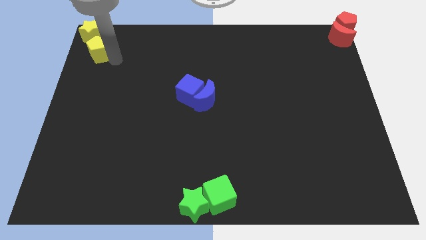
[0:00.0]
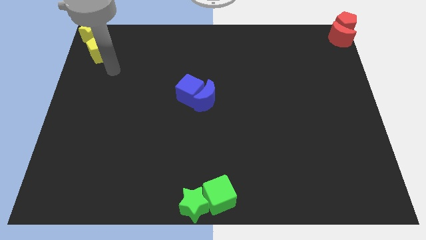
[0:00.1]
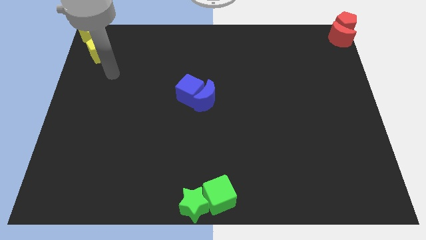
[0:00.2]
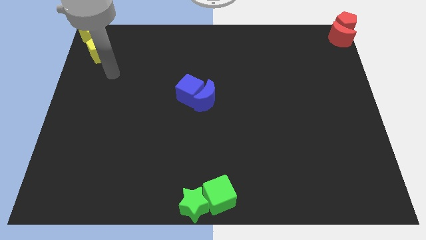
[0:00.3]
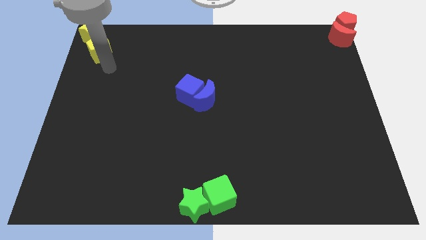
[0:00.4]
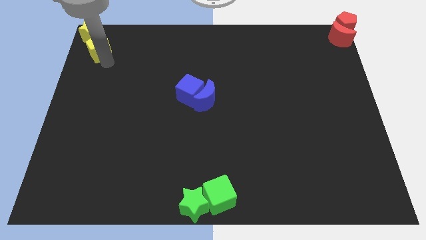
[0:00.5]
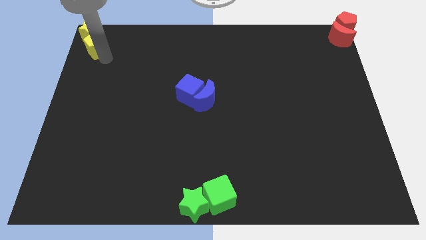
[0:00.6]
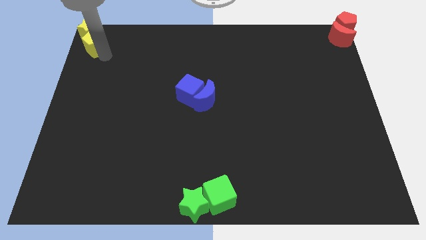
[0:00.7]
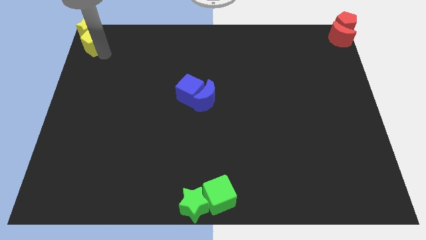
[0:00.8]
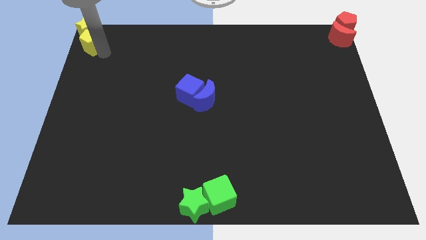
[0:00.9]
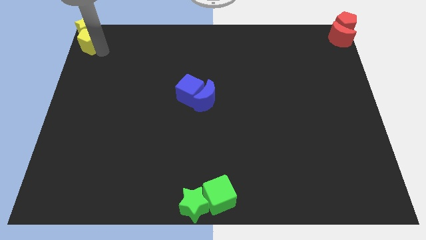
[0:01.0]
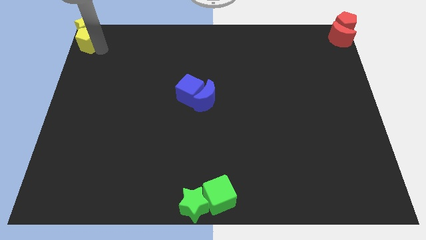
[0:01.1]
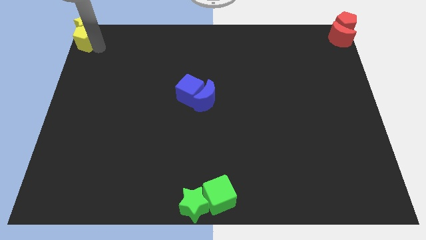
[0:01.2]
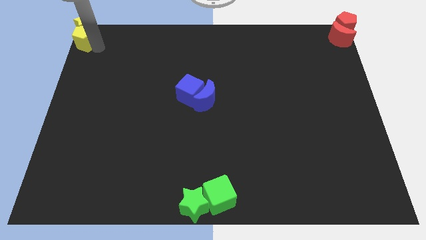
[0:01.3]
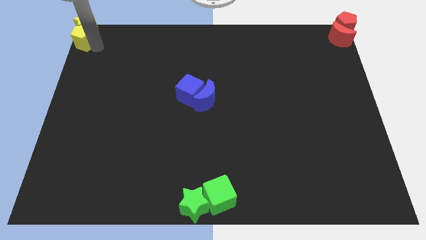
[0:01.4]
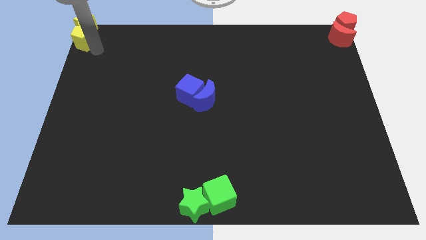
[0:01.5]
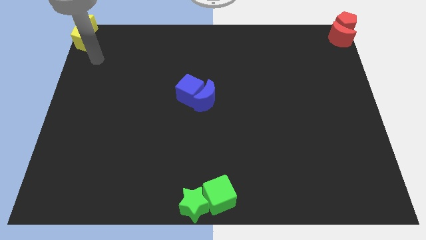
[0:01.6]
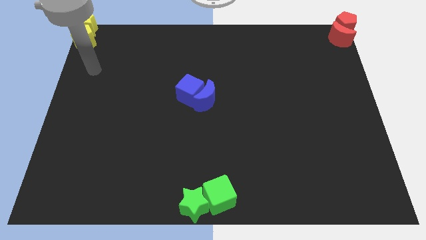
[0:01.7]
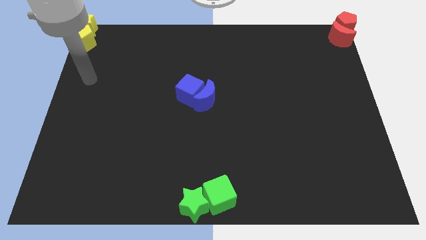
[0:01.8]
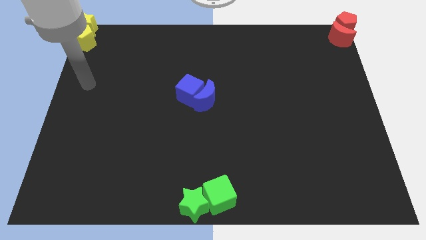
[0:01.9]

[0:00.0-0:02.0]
push the yellow pentagon into the yellow star

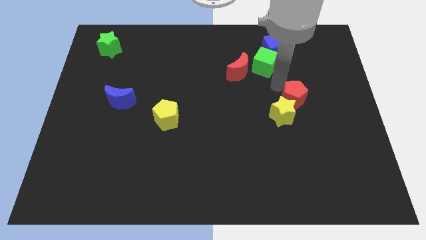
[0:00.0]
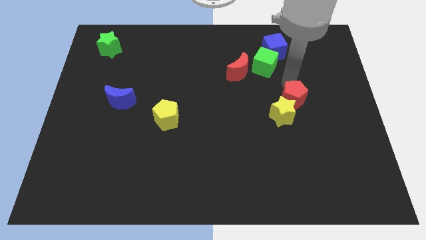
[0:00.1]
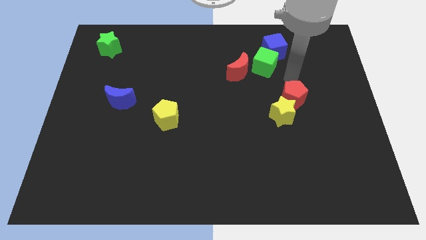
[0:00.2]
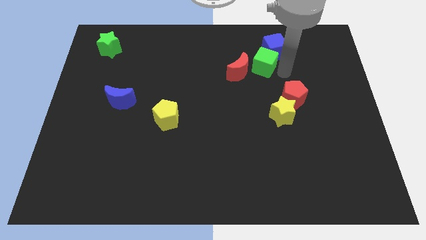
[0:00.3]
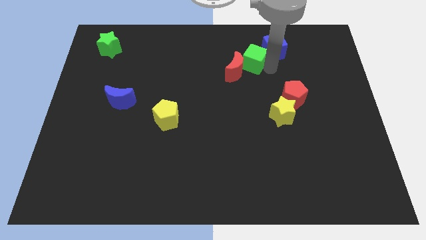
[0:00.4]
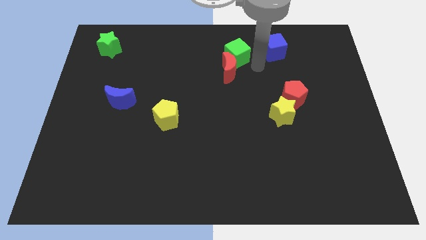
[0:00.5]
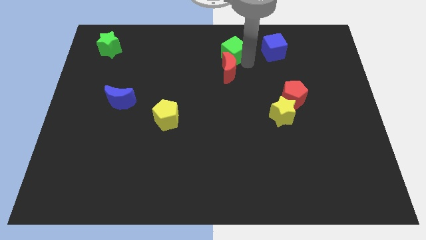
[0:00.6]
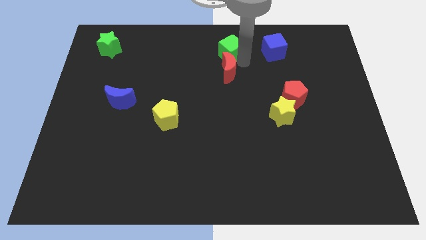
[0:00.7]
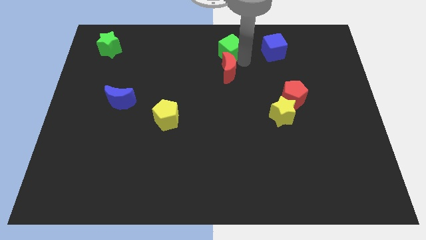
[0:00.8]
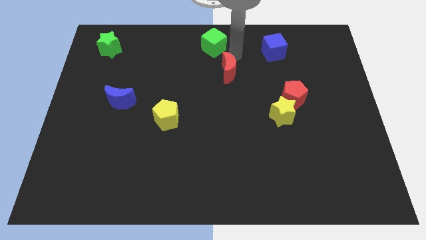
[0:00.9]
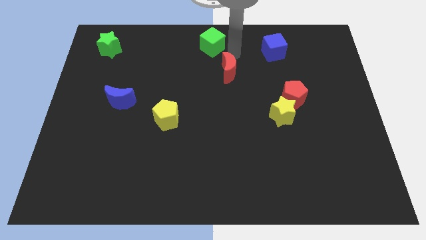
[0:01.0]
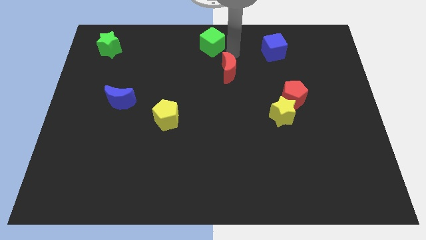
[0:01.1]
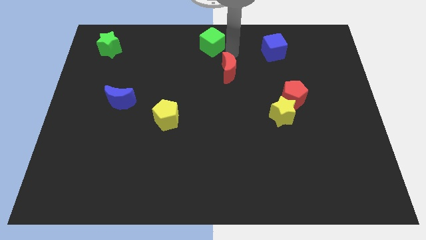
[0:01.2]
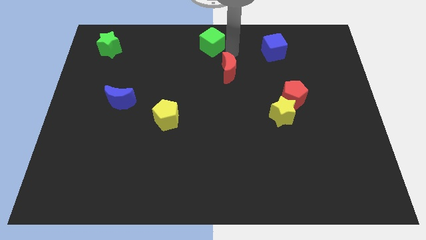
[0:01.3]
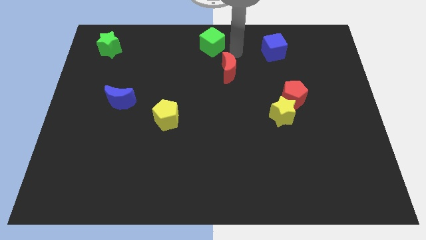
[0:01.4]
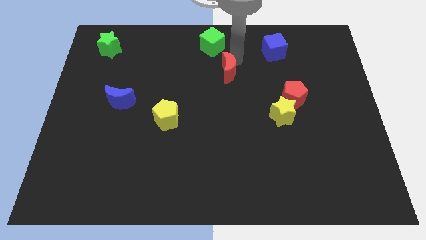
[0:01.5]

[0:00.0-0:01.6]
place green cube to the top center of the board

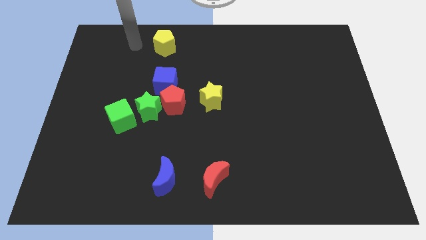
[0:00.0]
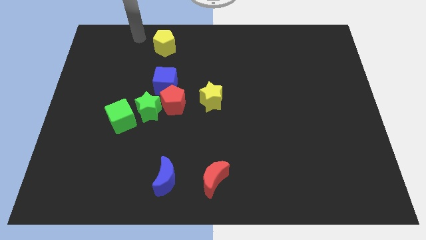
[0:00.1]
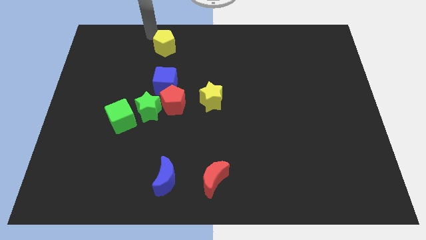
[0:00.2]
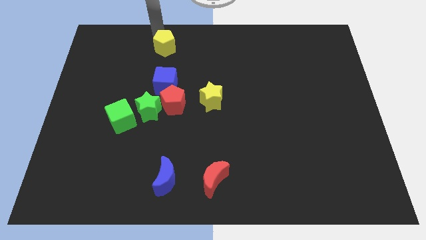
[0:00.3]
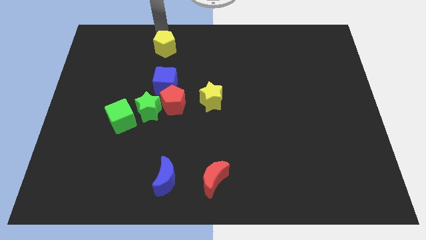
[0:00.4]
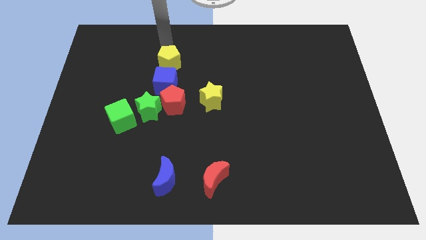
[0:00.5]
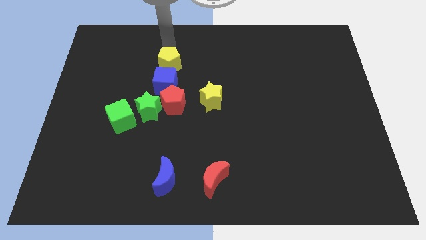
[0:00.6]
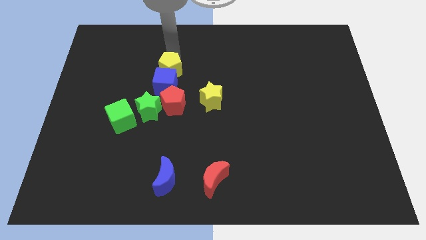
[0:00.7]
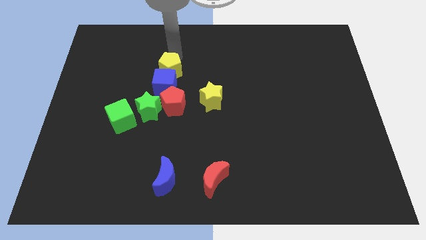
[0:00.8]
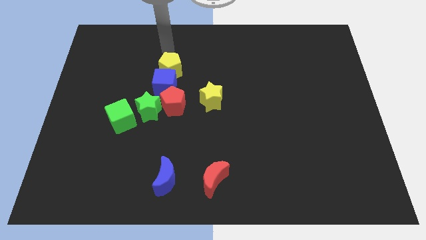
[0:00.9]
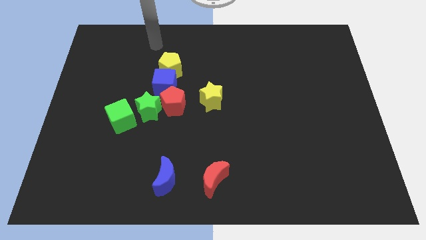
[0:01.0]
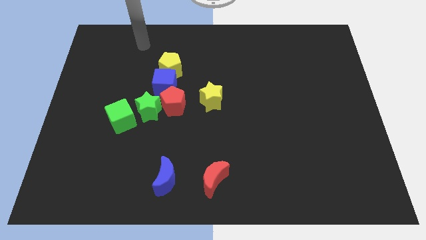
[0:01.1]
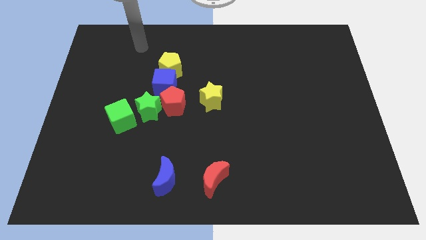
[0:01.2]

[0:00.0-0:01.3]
push the yellow pentagon into the blue cube

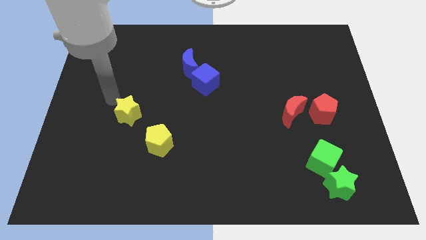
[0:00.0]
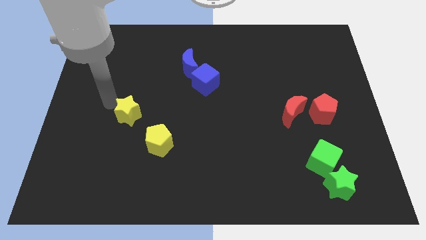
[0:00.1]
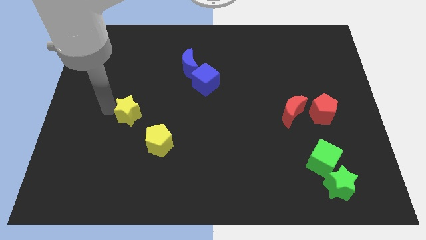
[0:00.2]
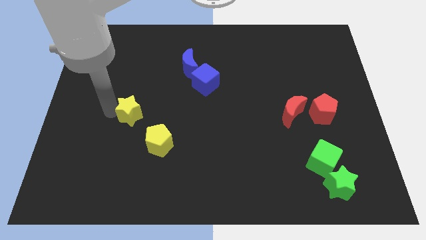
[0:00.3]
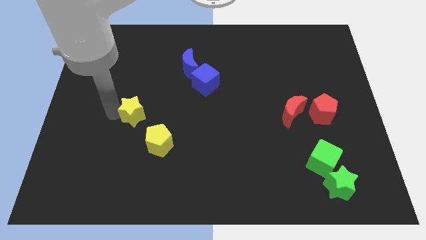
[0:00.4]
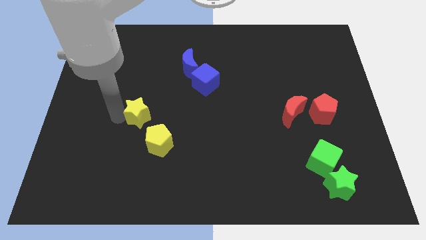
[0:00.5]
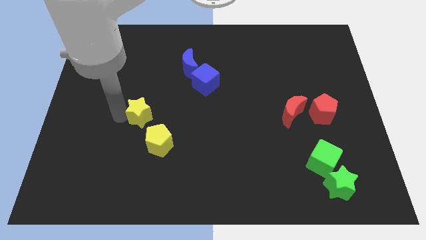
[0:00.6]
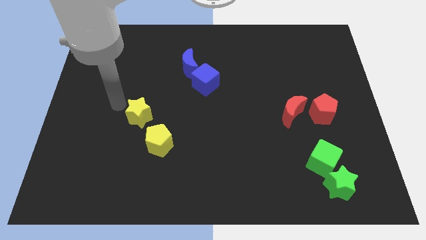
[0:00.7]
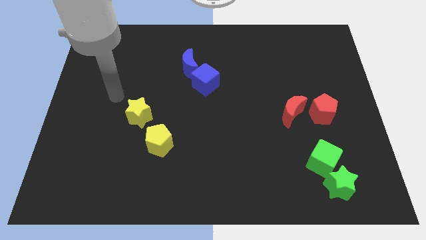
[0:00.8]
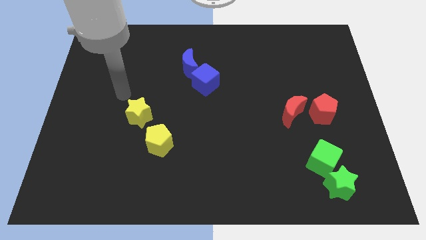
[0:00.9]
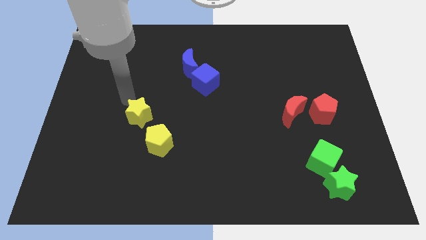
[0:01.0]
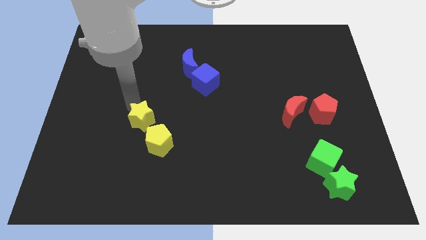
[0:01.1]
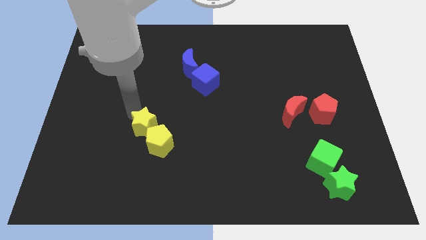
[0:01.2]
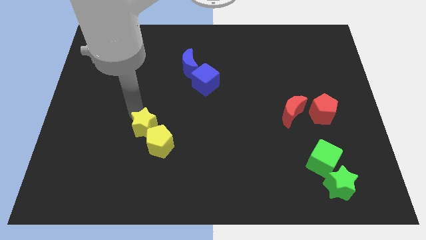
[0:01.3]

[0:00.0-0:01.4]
move the yellow star to the top left of the yellow pentagon

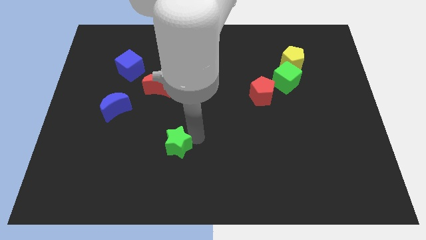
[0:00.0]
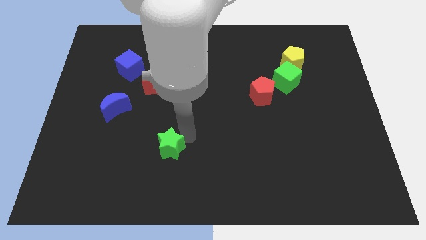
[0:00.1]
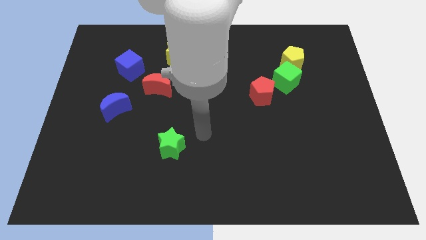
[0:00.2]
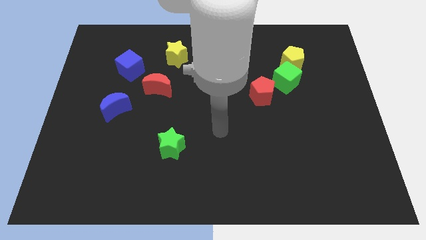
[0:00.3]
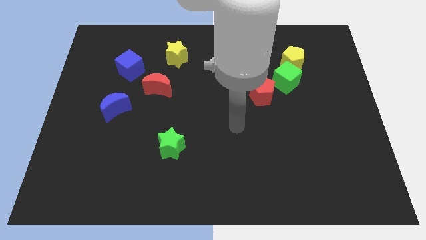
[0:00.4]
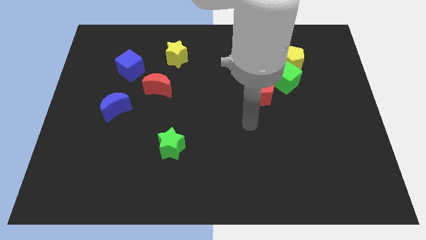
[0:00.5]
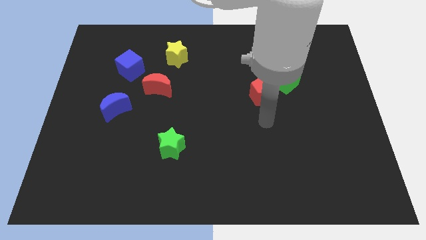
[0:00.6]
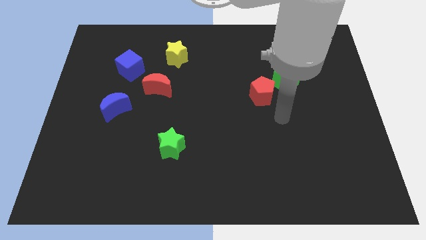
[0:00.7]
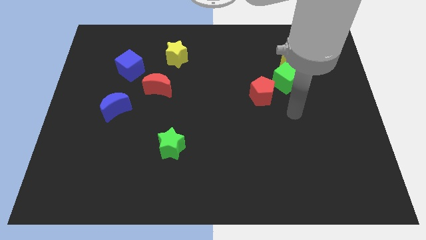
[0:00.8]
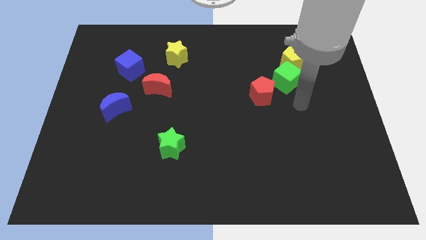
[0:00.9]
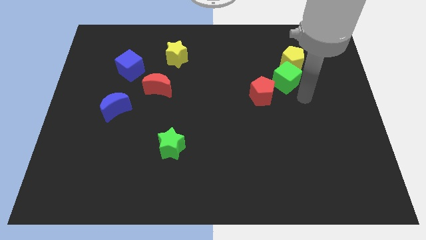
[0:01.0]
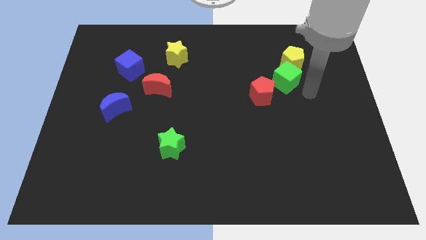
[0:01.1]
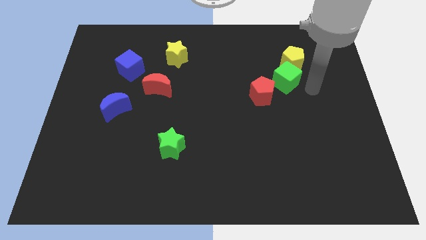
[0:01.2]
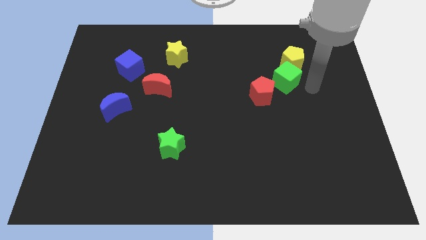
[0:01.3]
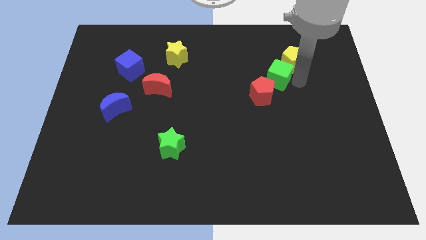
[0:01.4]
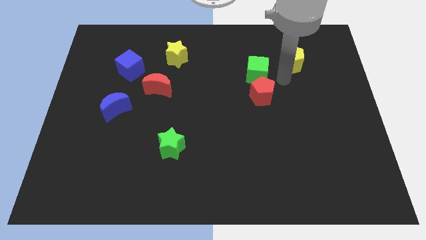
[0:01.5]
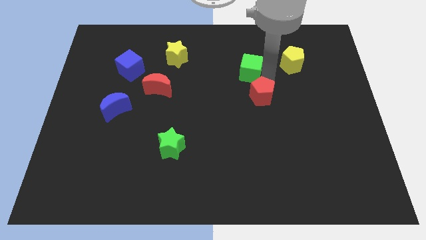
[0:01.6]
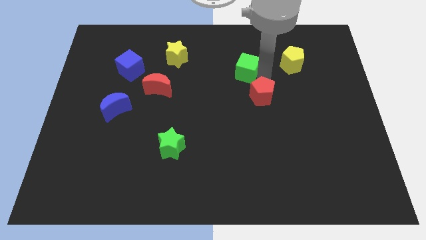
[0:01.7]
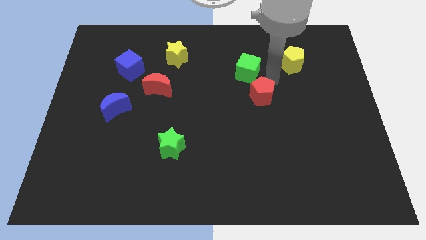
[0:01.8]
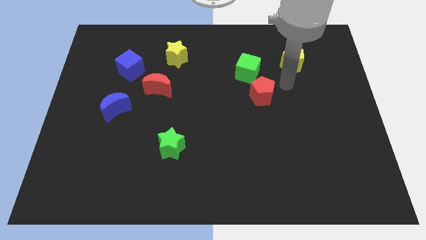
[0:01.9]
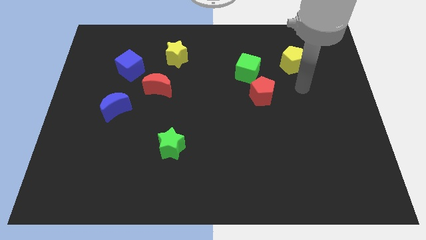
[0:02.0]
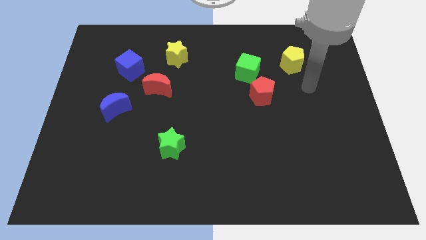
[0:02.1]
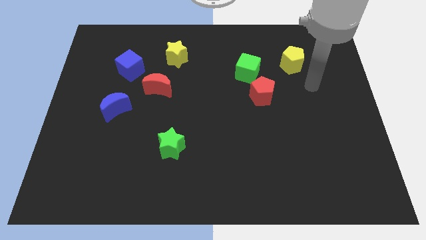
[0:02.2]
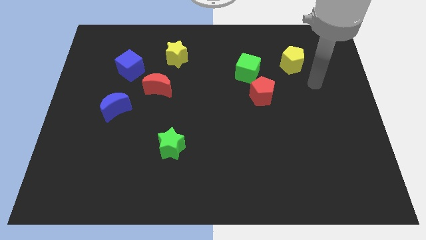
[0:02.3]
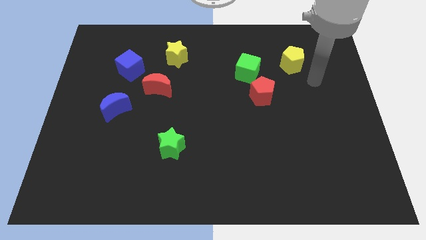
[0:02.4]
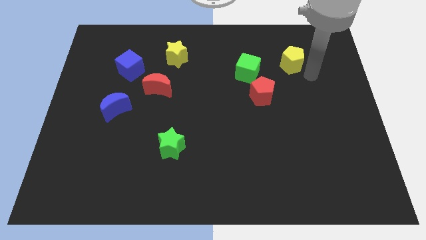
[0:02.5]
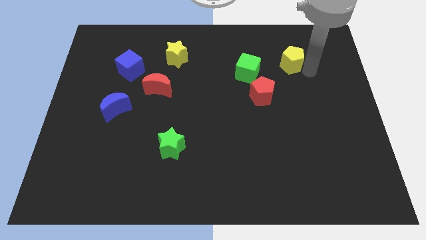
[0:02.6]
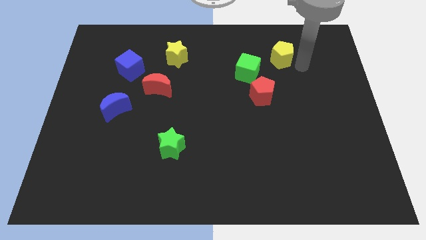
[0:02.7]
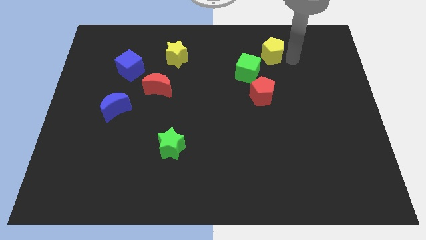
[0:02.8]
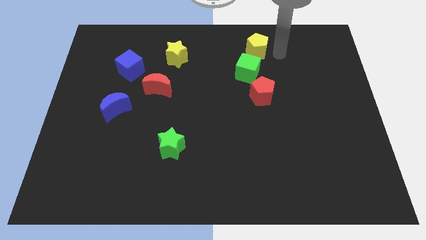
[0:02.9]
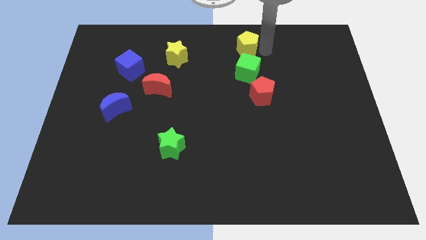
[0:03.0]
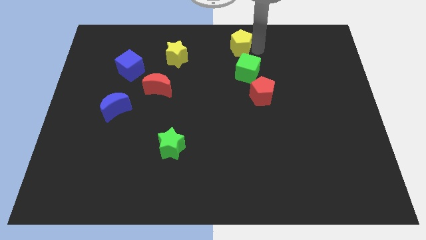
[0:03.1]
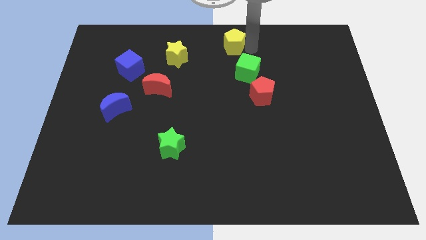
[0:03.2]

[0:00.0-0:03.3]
slightly push the green cube and yellow pentagon towards the top center
